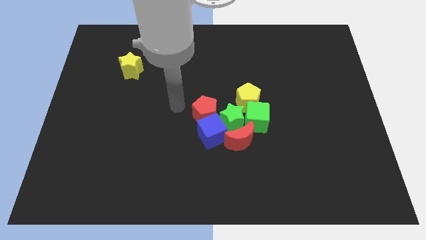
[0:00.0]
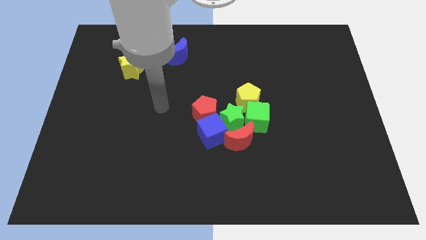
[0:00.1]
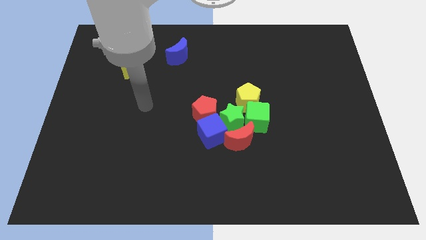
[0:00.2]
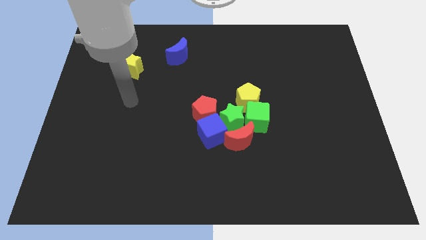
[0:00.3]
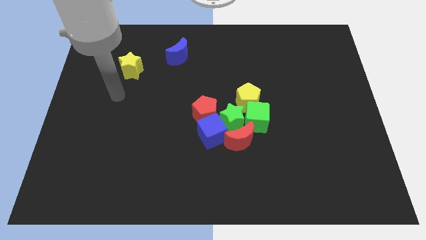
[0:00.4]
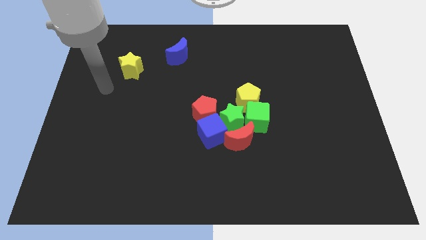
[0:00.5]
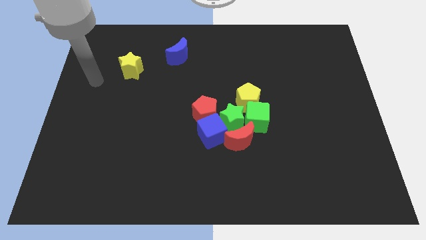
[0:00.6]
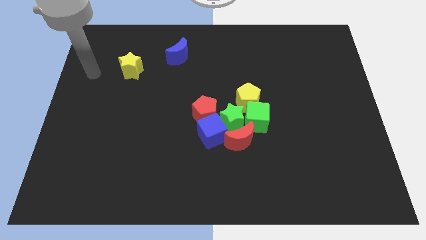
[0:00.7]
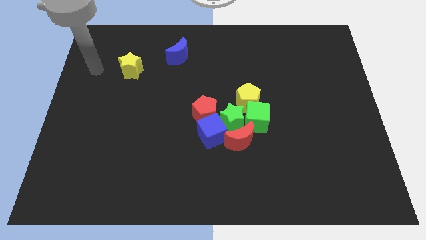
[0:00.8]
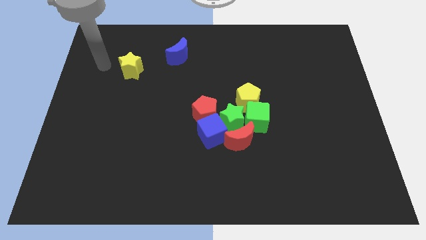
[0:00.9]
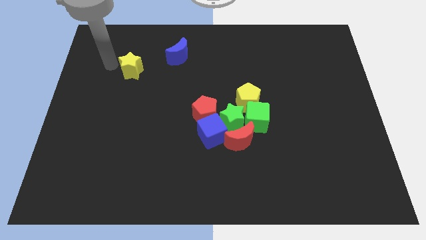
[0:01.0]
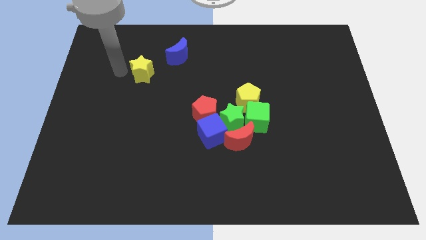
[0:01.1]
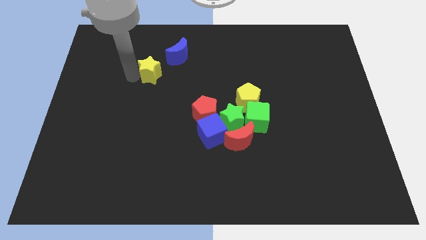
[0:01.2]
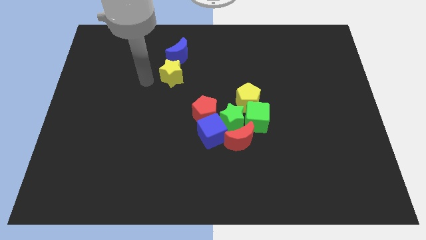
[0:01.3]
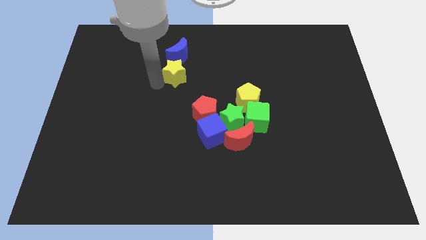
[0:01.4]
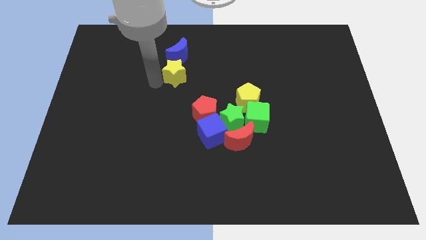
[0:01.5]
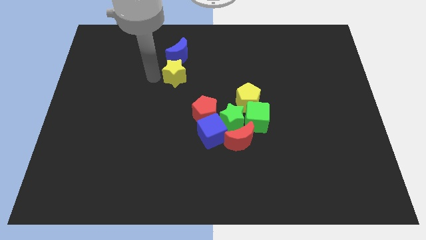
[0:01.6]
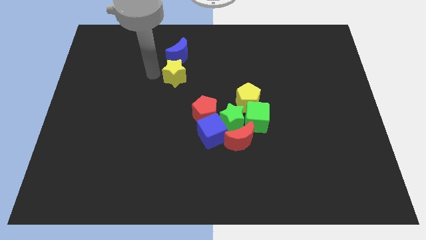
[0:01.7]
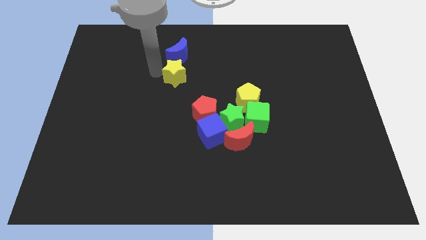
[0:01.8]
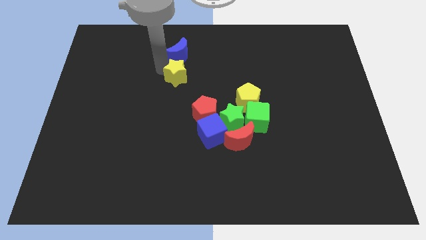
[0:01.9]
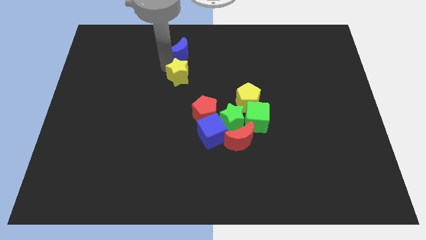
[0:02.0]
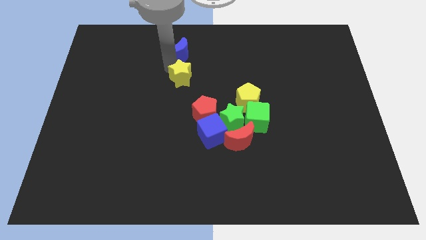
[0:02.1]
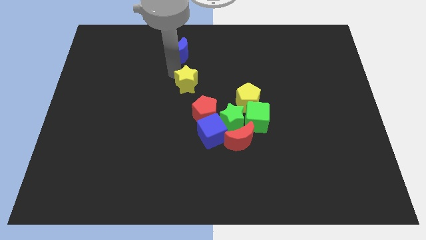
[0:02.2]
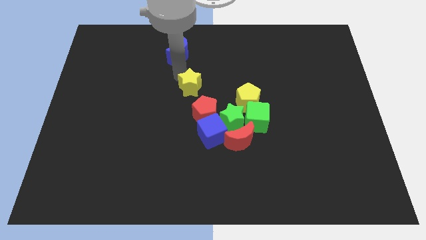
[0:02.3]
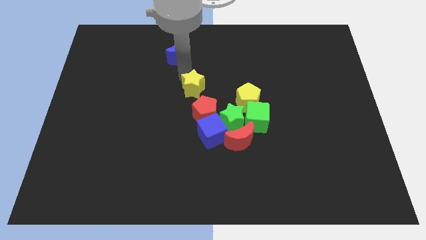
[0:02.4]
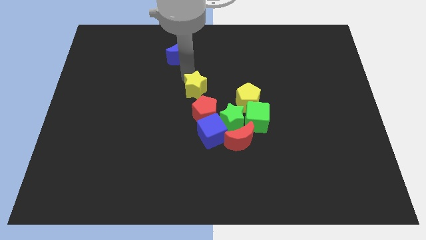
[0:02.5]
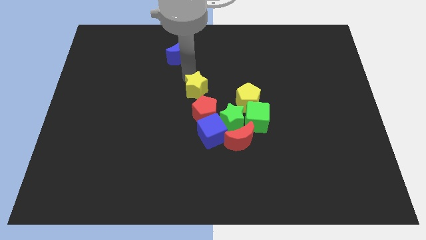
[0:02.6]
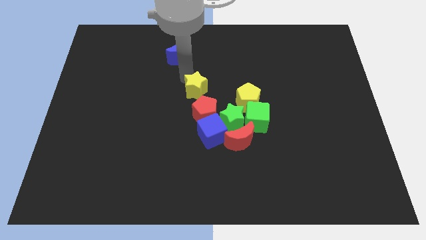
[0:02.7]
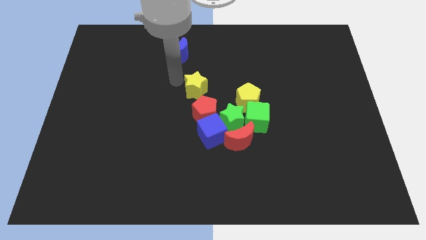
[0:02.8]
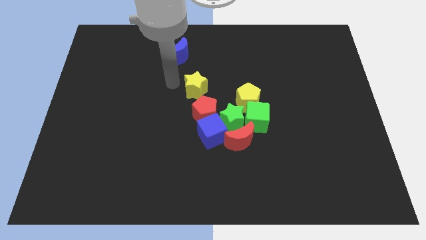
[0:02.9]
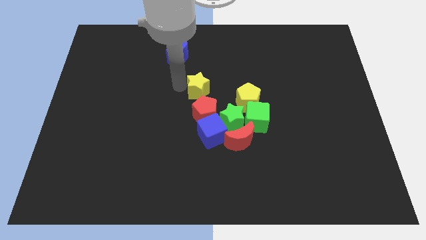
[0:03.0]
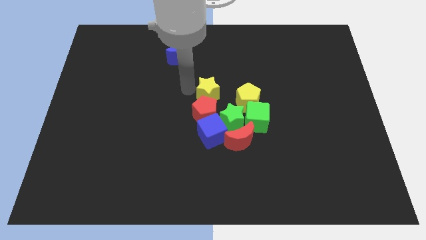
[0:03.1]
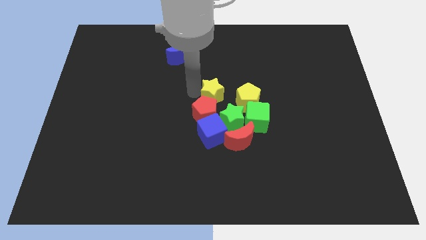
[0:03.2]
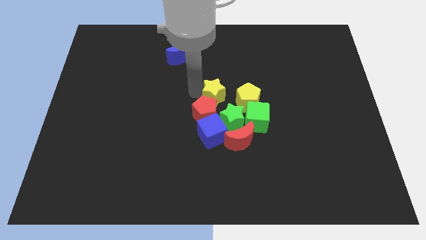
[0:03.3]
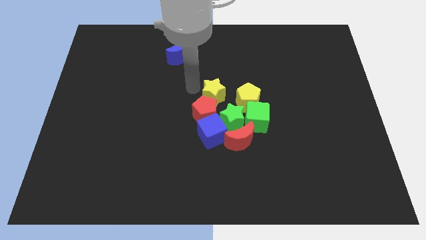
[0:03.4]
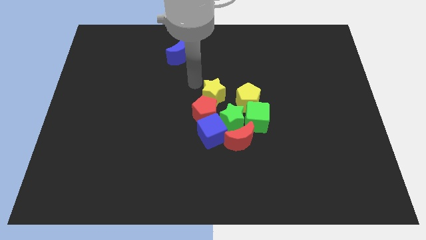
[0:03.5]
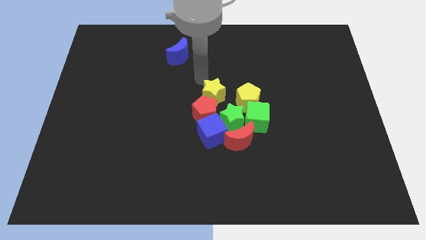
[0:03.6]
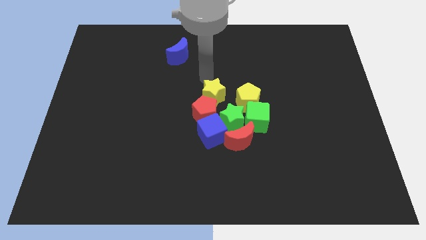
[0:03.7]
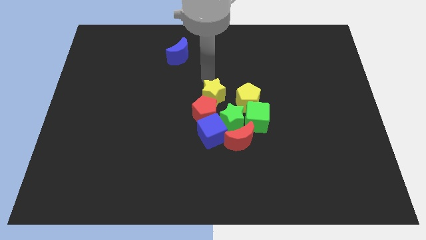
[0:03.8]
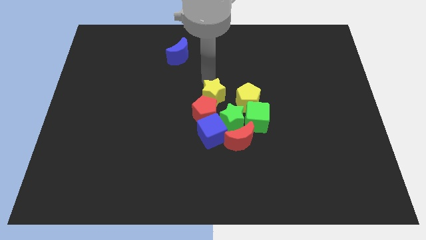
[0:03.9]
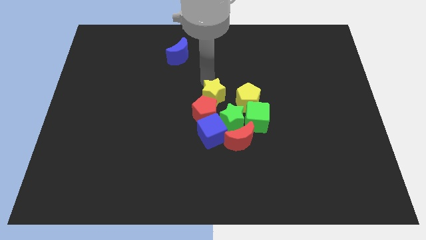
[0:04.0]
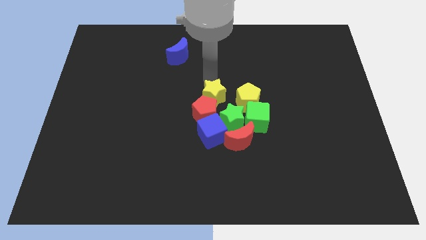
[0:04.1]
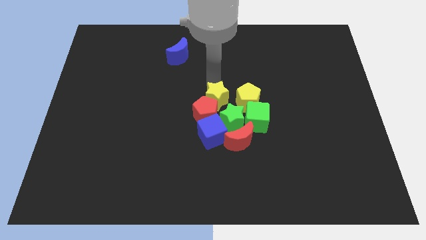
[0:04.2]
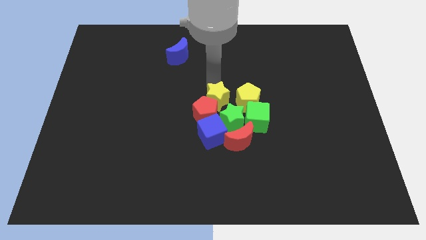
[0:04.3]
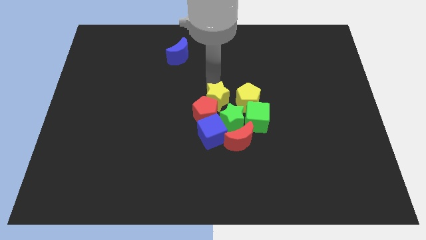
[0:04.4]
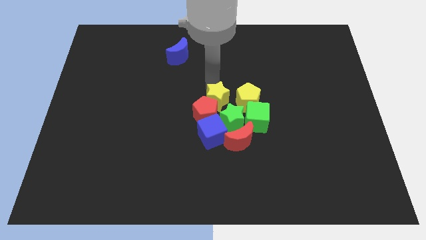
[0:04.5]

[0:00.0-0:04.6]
push the yellow star into the red pentagon

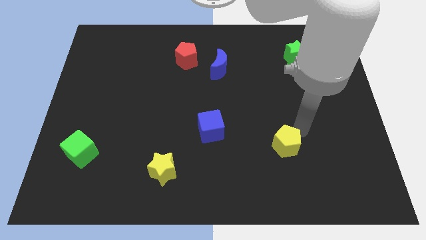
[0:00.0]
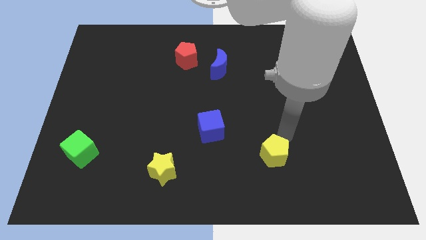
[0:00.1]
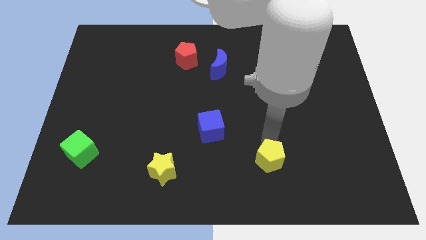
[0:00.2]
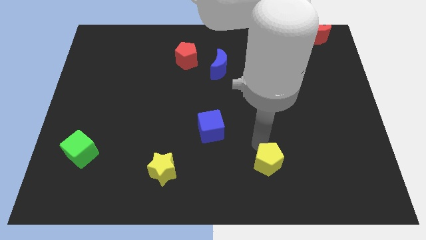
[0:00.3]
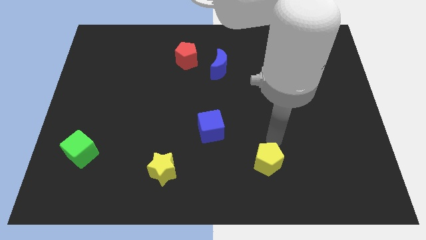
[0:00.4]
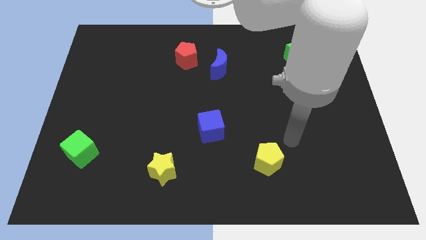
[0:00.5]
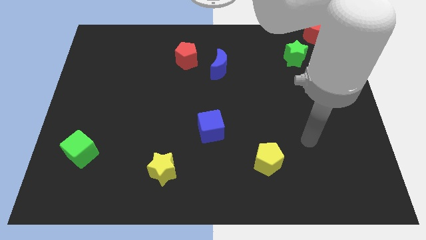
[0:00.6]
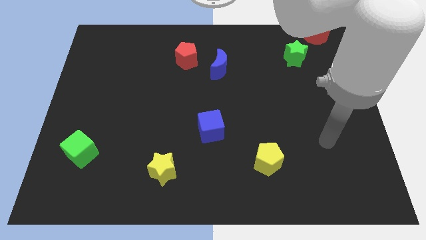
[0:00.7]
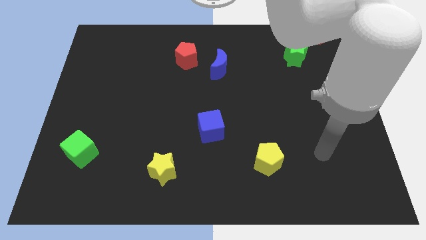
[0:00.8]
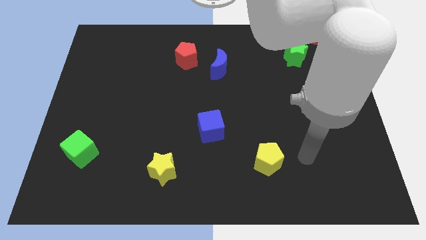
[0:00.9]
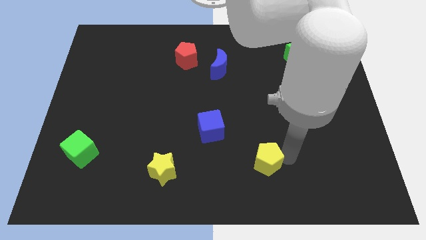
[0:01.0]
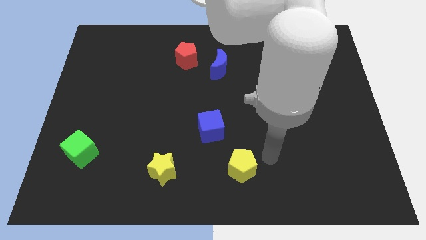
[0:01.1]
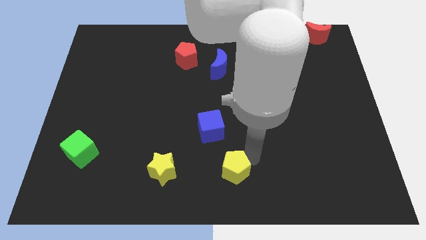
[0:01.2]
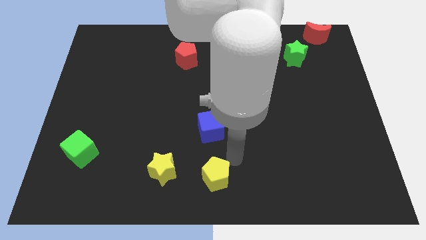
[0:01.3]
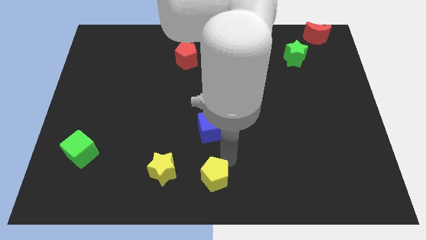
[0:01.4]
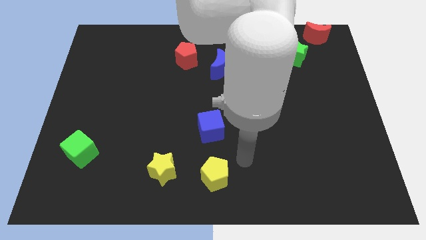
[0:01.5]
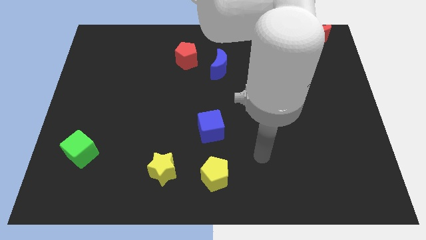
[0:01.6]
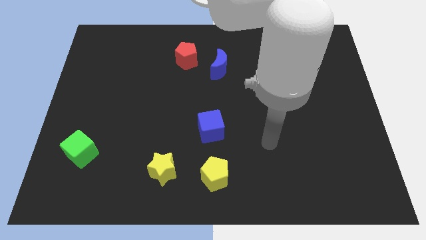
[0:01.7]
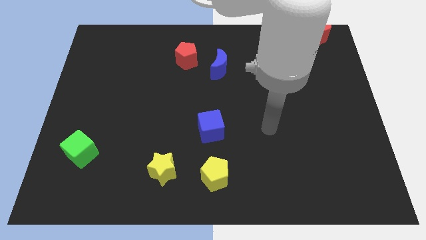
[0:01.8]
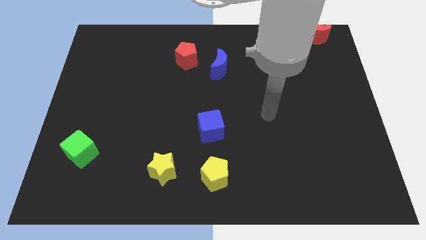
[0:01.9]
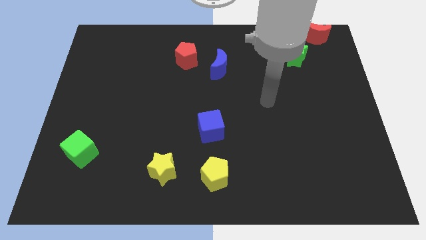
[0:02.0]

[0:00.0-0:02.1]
push yellow pentagon towards yellow star

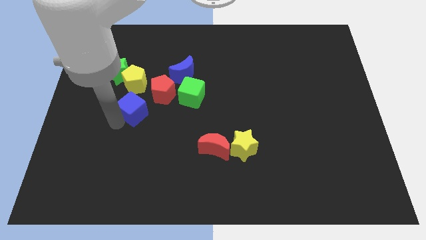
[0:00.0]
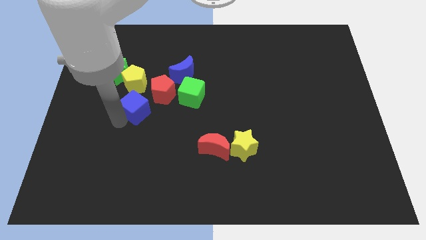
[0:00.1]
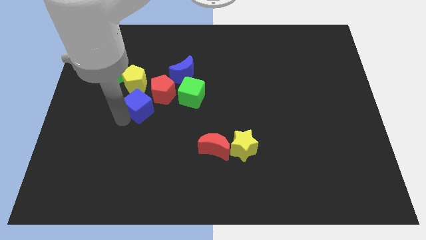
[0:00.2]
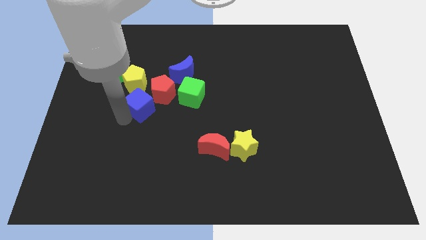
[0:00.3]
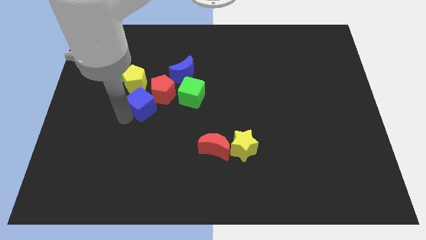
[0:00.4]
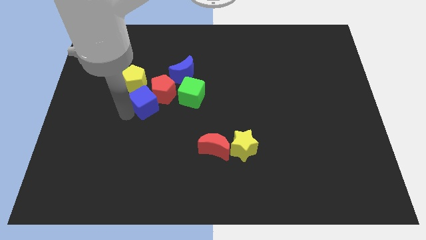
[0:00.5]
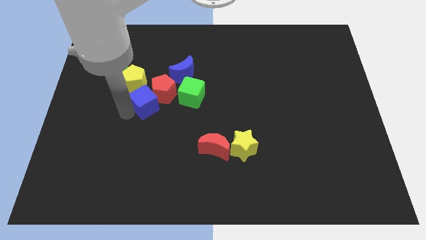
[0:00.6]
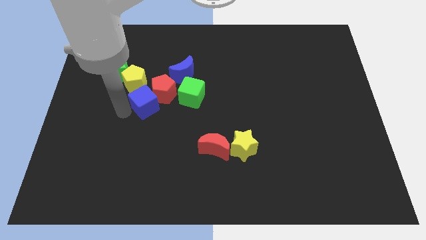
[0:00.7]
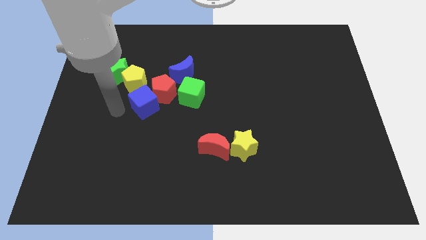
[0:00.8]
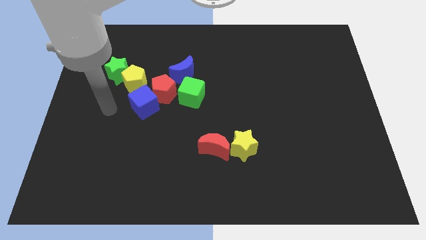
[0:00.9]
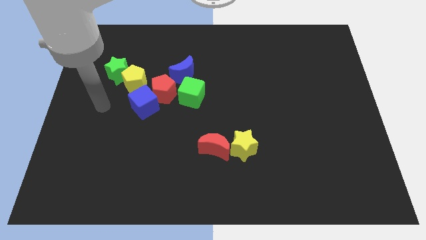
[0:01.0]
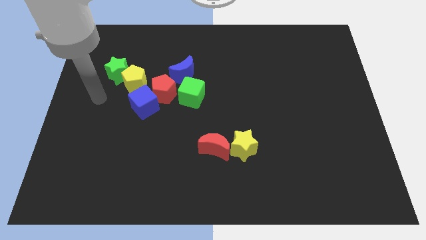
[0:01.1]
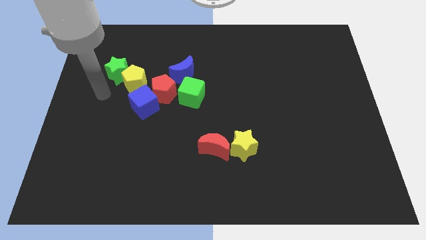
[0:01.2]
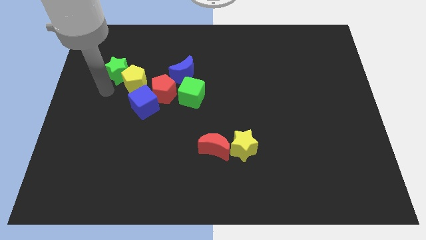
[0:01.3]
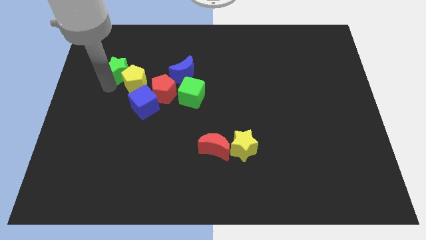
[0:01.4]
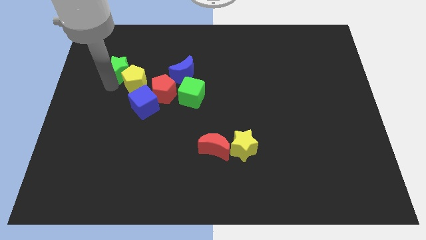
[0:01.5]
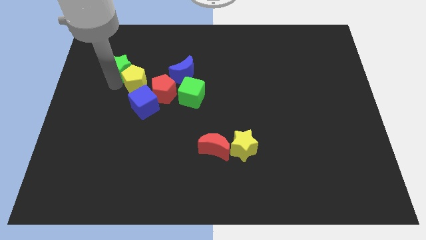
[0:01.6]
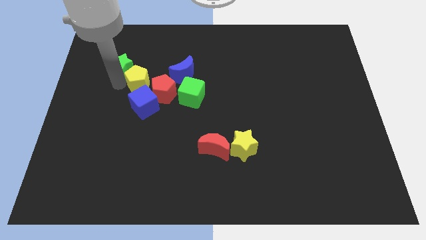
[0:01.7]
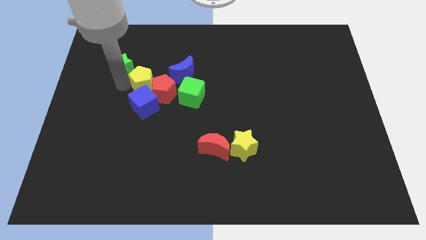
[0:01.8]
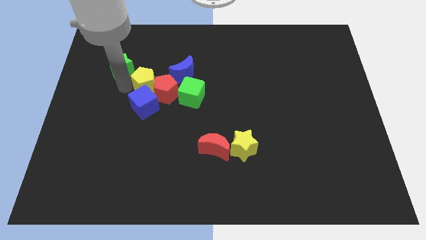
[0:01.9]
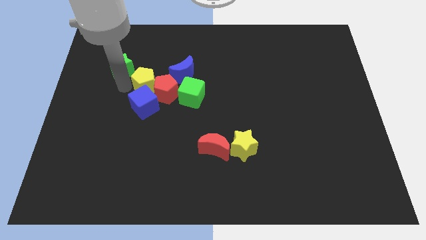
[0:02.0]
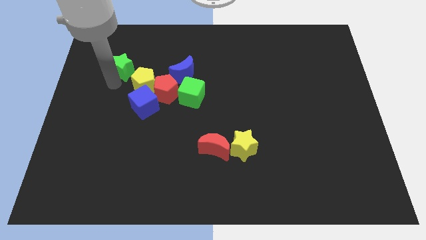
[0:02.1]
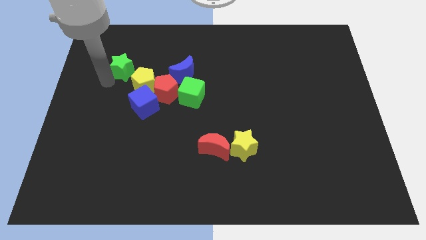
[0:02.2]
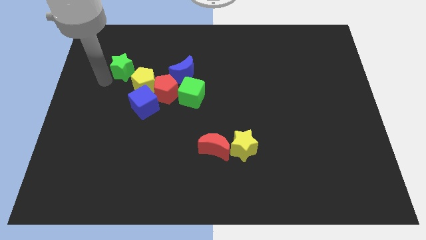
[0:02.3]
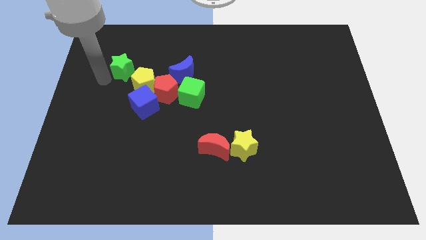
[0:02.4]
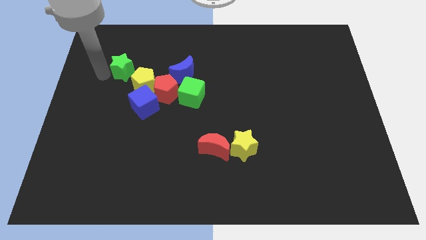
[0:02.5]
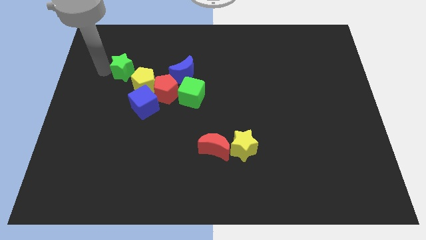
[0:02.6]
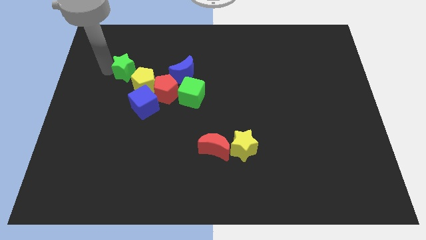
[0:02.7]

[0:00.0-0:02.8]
push the yellow pentagon left to the red pentagon
